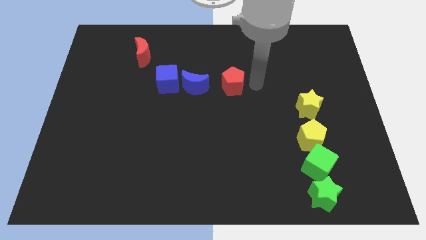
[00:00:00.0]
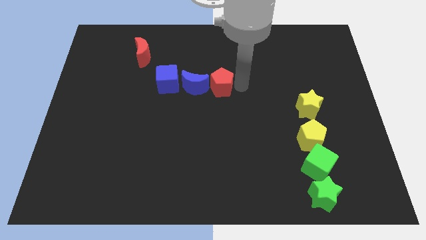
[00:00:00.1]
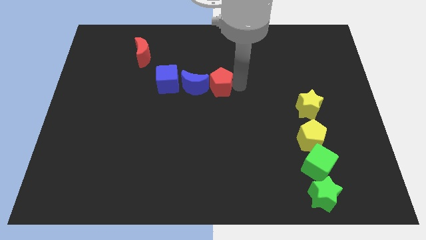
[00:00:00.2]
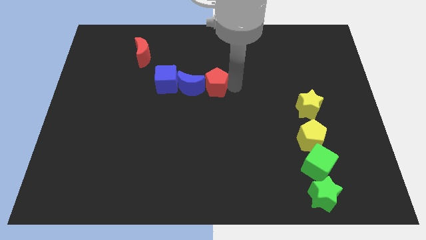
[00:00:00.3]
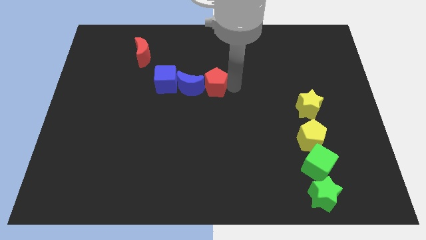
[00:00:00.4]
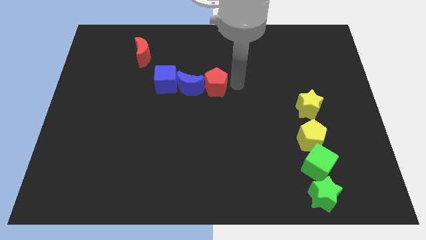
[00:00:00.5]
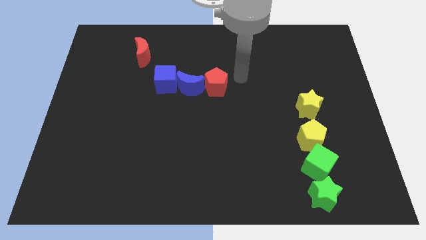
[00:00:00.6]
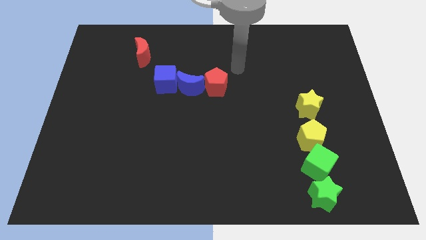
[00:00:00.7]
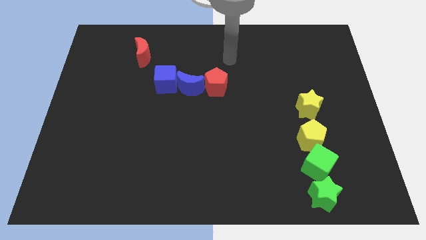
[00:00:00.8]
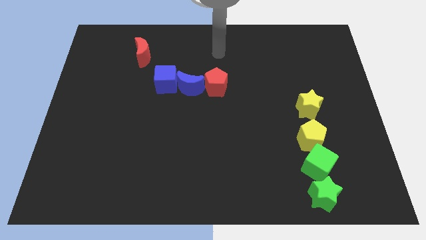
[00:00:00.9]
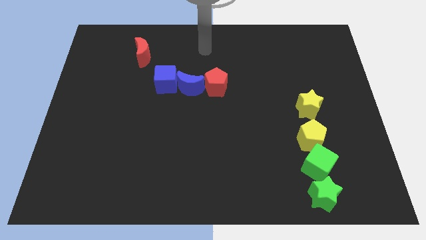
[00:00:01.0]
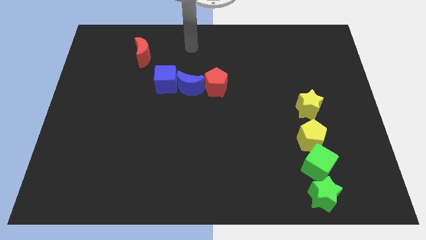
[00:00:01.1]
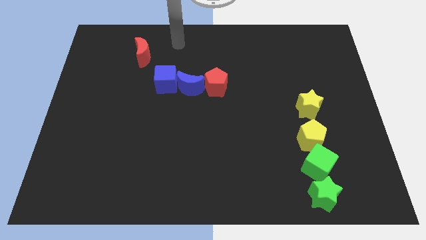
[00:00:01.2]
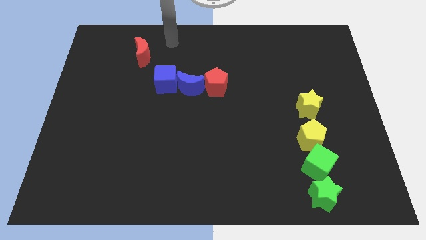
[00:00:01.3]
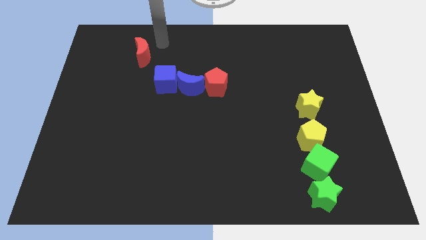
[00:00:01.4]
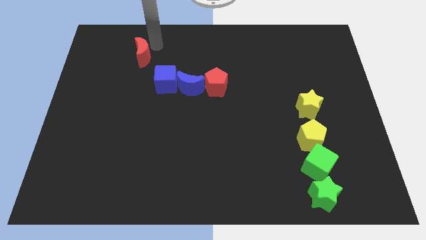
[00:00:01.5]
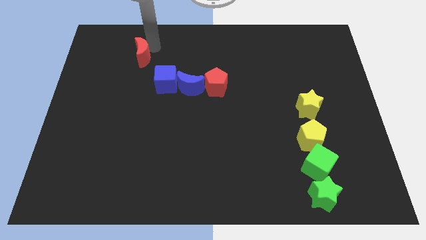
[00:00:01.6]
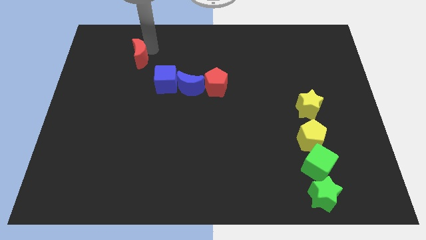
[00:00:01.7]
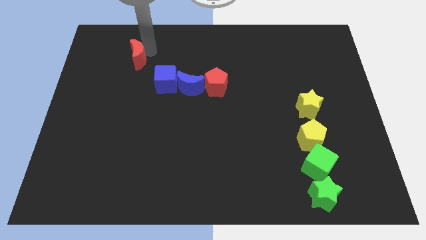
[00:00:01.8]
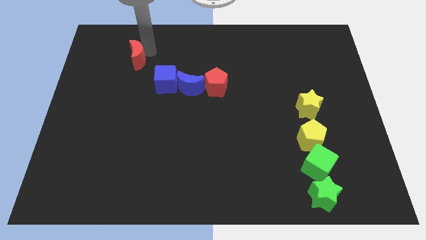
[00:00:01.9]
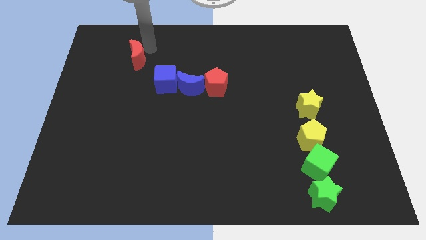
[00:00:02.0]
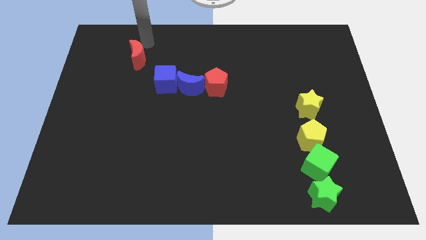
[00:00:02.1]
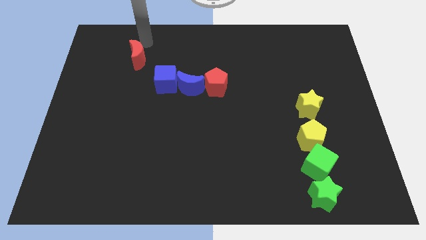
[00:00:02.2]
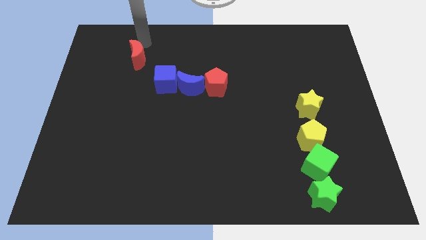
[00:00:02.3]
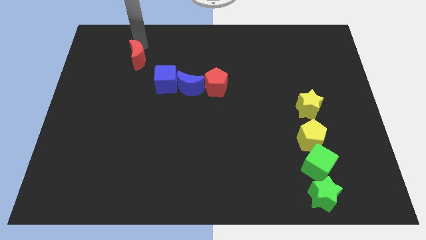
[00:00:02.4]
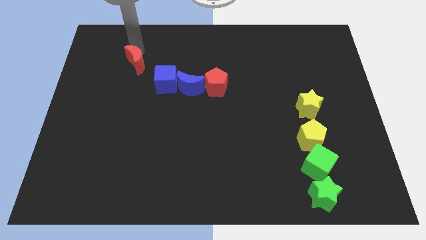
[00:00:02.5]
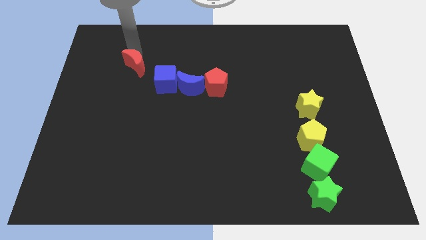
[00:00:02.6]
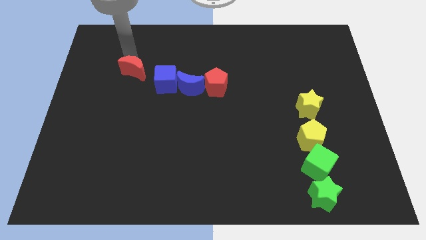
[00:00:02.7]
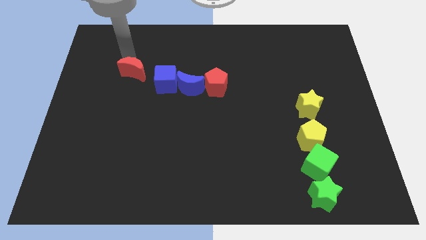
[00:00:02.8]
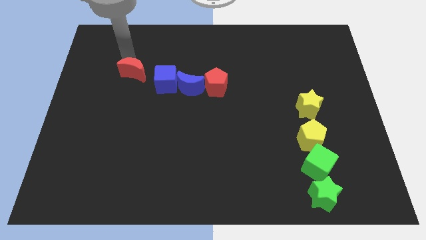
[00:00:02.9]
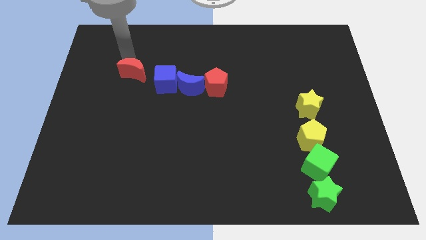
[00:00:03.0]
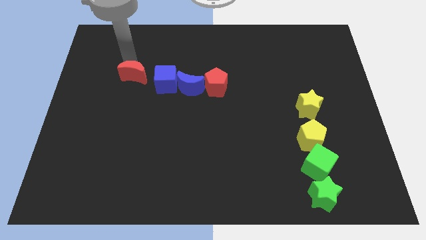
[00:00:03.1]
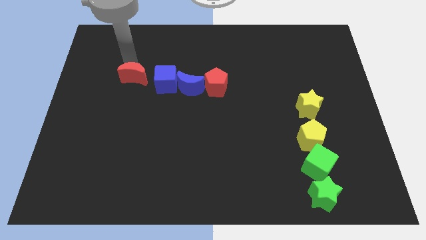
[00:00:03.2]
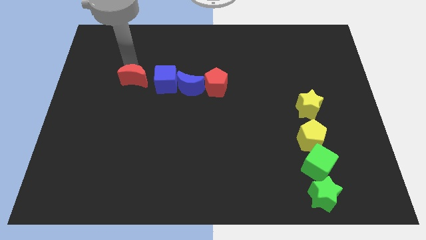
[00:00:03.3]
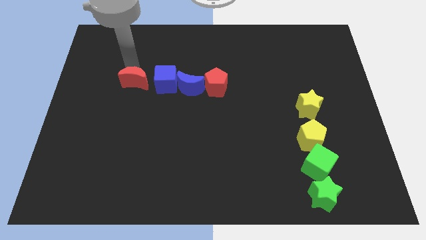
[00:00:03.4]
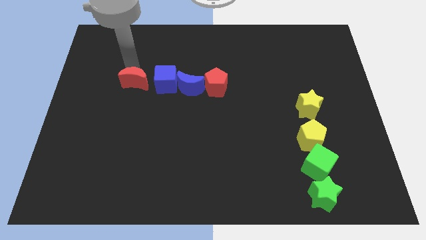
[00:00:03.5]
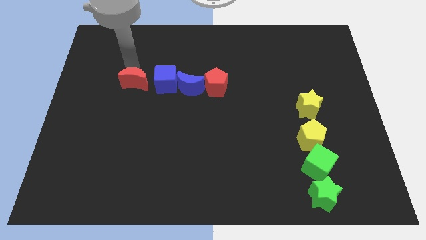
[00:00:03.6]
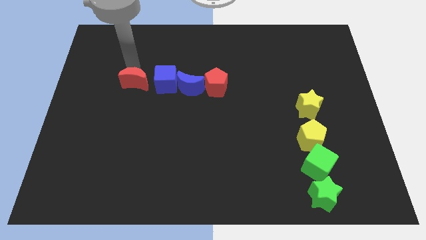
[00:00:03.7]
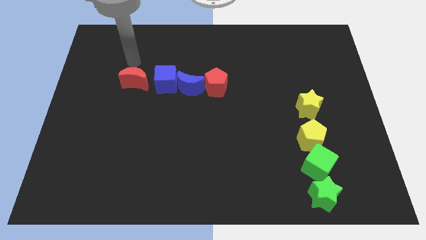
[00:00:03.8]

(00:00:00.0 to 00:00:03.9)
place the red moon on the left side of the blue cube

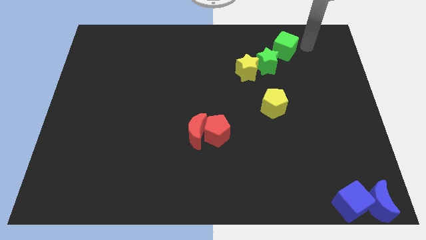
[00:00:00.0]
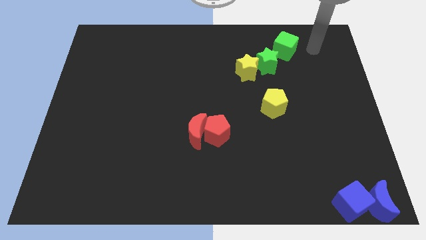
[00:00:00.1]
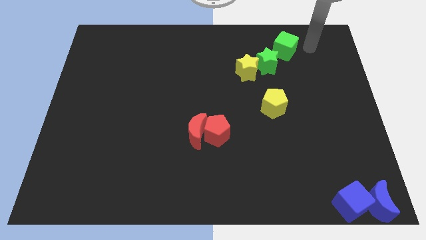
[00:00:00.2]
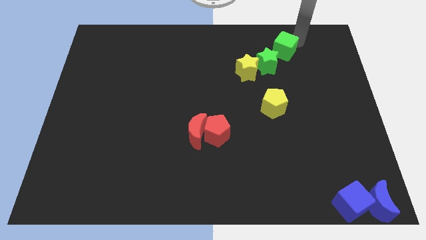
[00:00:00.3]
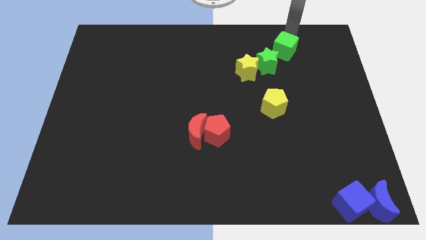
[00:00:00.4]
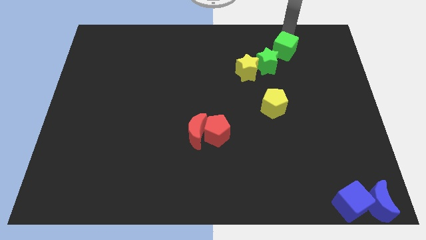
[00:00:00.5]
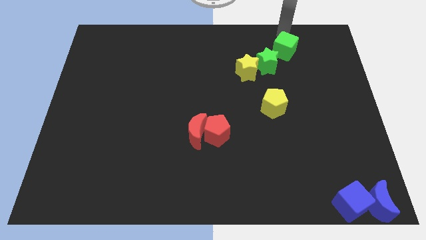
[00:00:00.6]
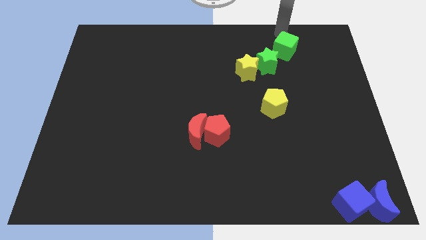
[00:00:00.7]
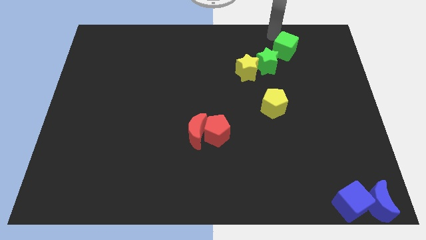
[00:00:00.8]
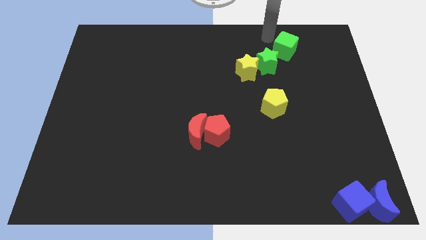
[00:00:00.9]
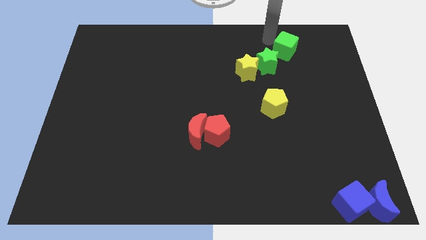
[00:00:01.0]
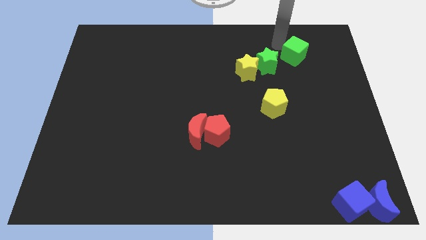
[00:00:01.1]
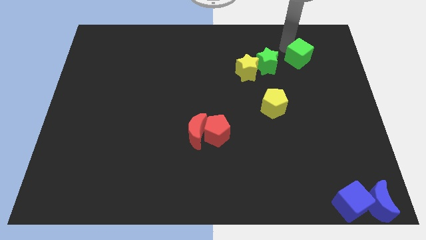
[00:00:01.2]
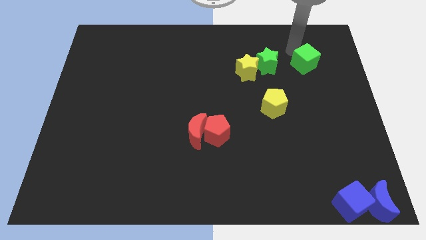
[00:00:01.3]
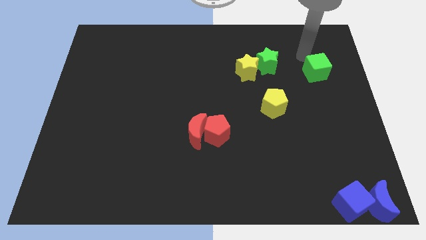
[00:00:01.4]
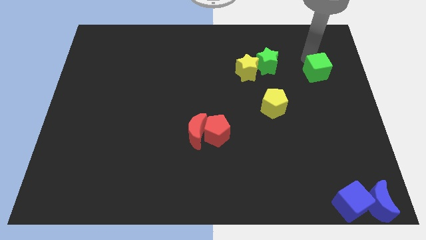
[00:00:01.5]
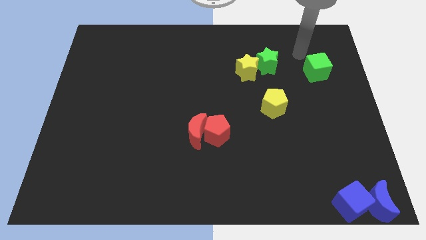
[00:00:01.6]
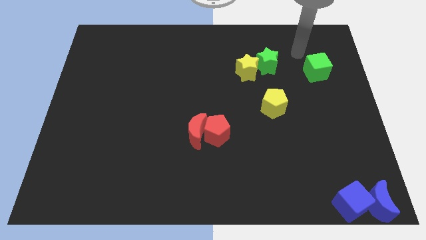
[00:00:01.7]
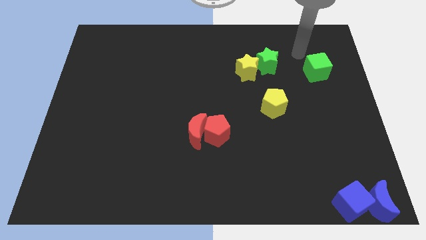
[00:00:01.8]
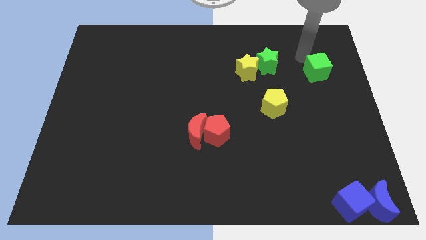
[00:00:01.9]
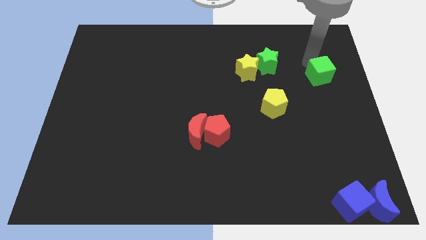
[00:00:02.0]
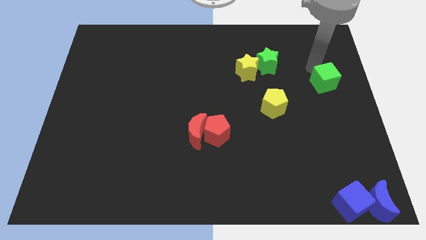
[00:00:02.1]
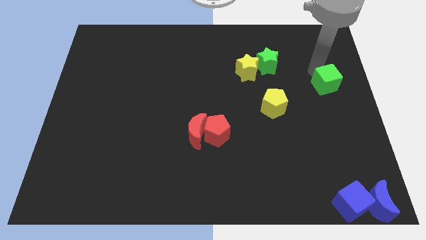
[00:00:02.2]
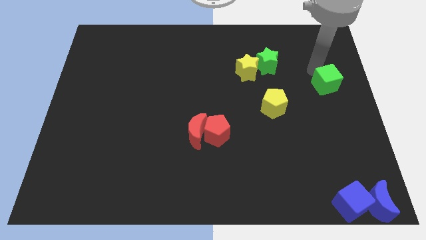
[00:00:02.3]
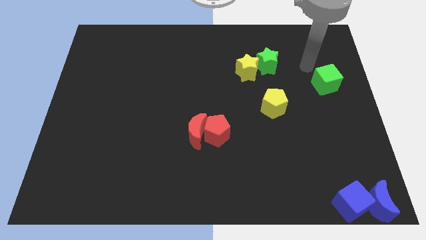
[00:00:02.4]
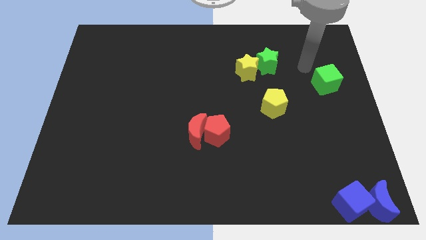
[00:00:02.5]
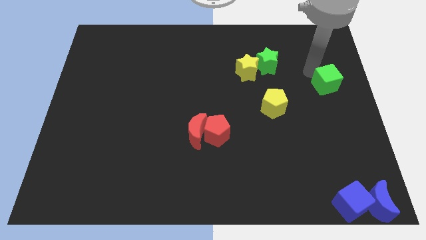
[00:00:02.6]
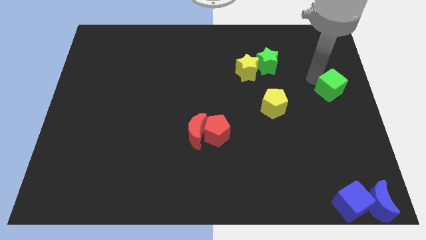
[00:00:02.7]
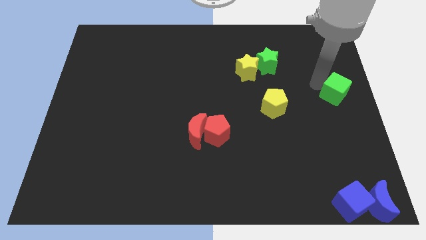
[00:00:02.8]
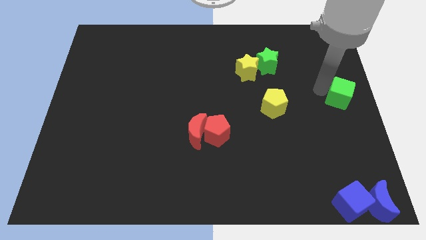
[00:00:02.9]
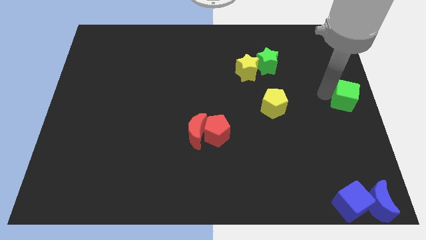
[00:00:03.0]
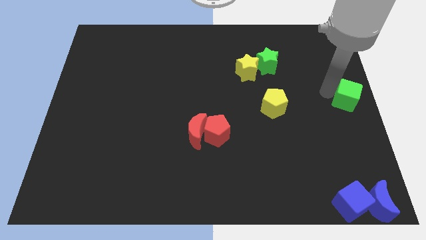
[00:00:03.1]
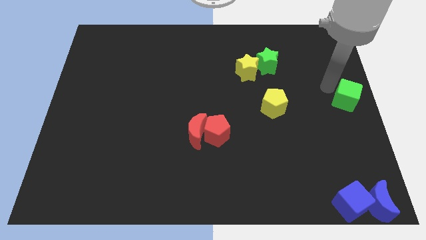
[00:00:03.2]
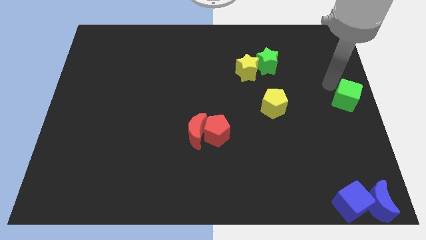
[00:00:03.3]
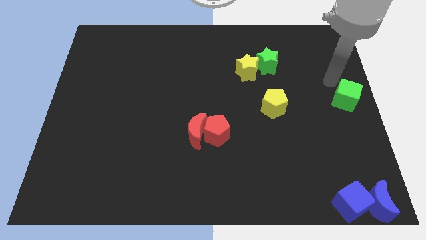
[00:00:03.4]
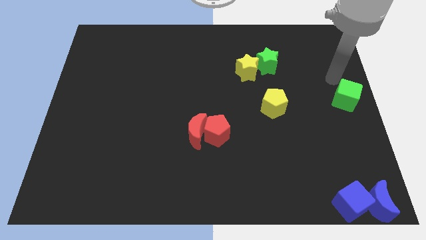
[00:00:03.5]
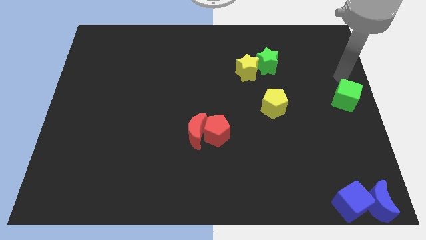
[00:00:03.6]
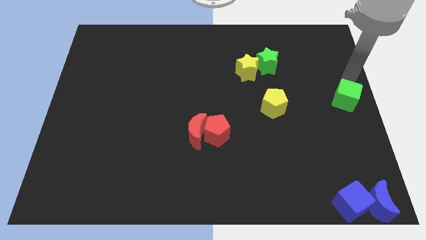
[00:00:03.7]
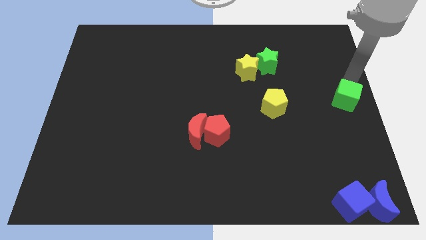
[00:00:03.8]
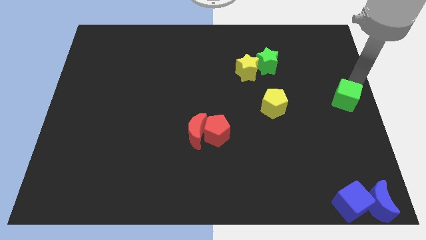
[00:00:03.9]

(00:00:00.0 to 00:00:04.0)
place the green cube towards the middle right side of the board

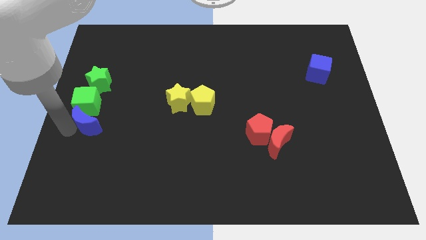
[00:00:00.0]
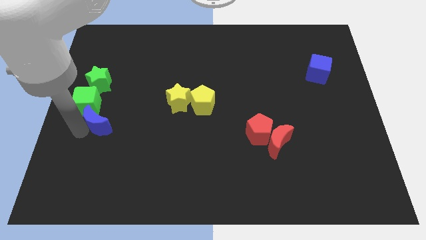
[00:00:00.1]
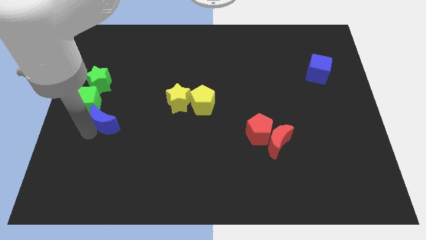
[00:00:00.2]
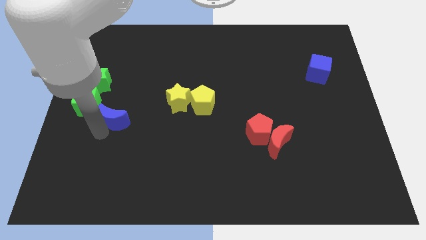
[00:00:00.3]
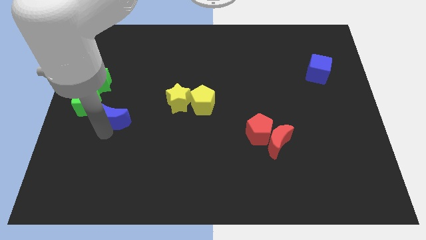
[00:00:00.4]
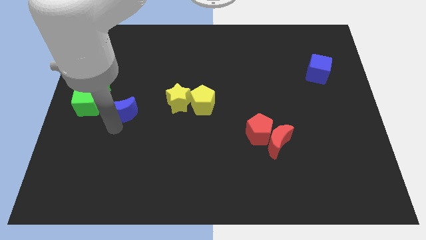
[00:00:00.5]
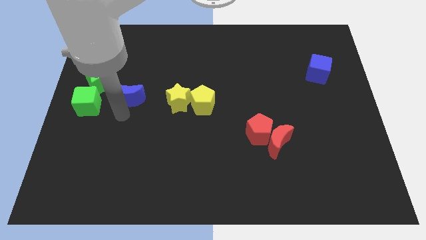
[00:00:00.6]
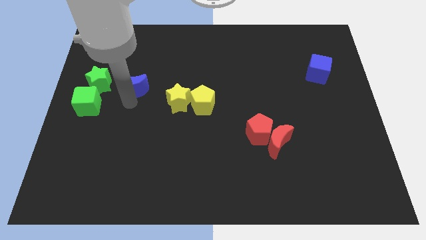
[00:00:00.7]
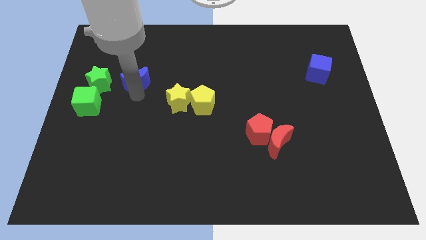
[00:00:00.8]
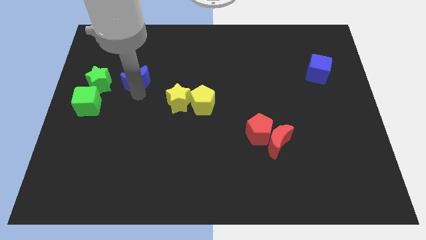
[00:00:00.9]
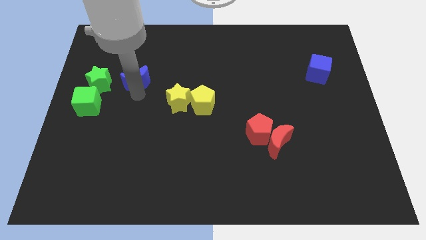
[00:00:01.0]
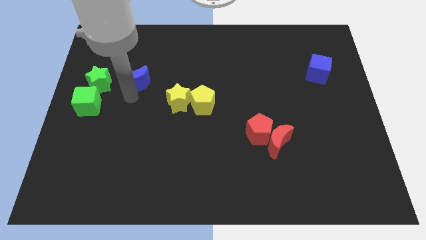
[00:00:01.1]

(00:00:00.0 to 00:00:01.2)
move the blue moon to the right side of the green star
